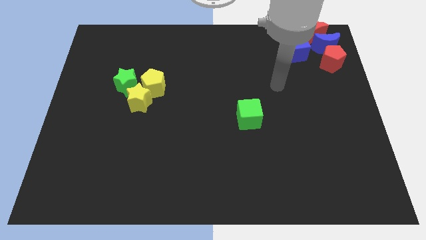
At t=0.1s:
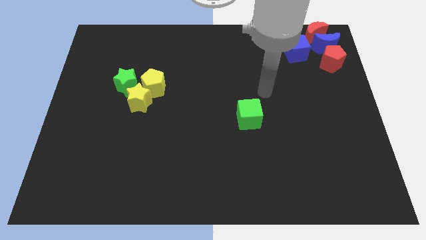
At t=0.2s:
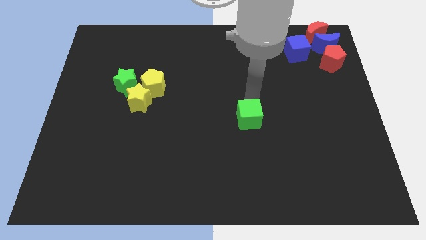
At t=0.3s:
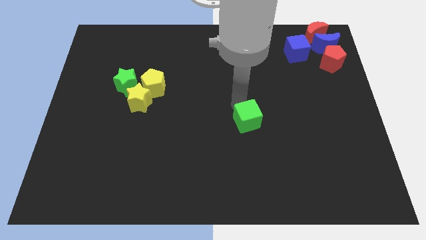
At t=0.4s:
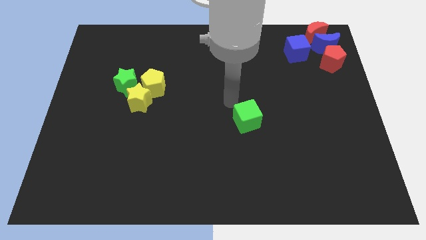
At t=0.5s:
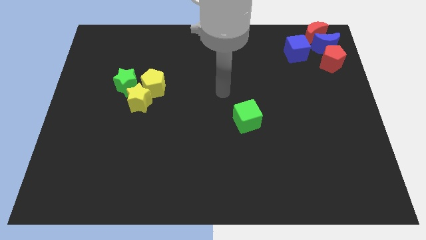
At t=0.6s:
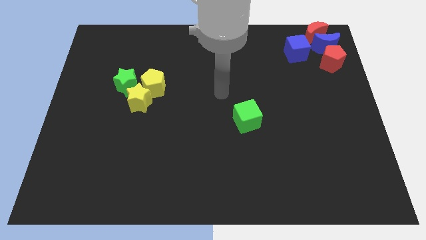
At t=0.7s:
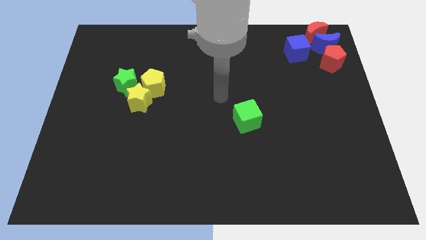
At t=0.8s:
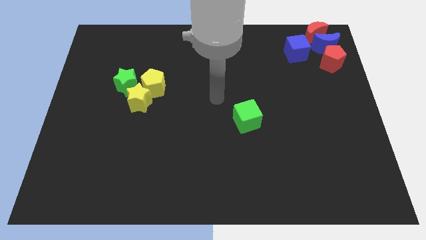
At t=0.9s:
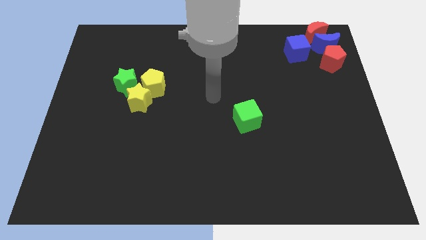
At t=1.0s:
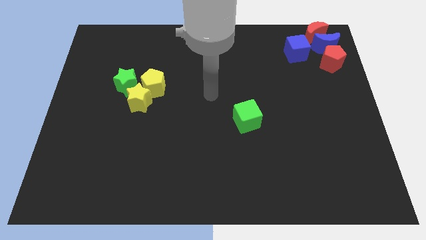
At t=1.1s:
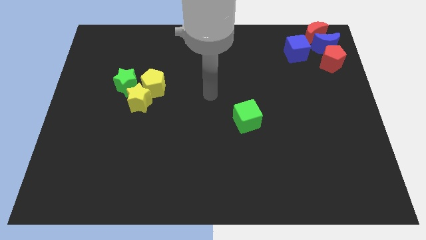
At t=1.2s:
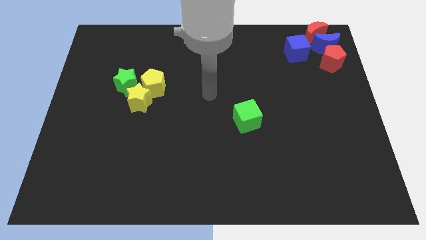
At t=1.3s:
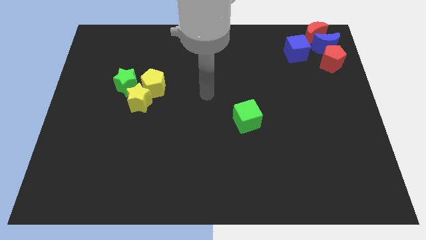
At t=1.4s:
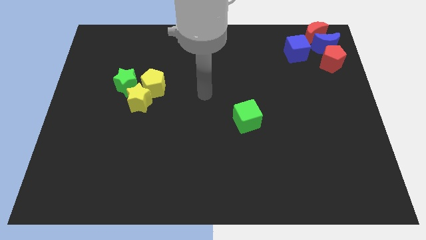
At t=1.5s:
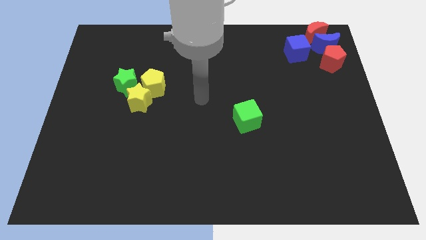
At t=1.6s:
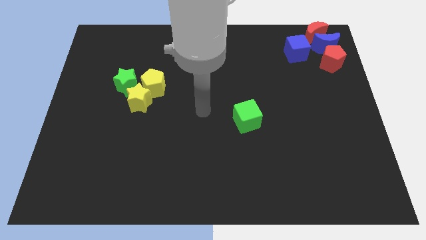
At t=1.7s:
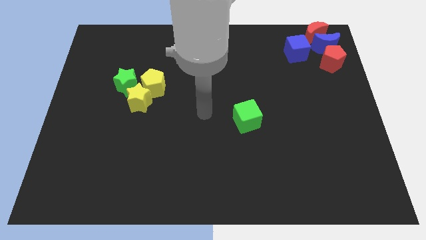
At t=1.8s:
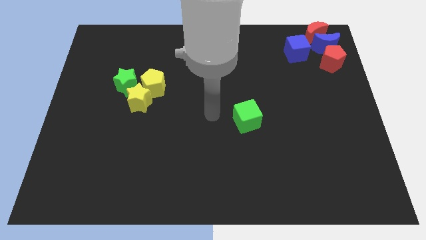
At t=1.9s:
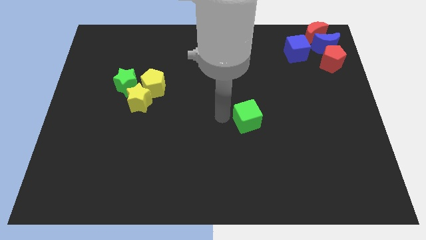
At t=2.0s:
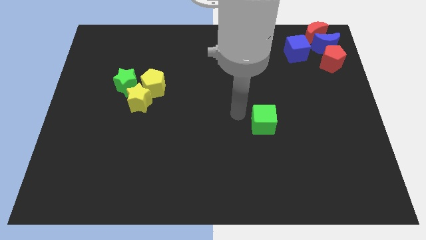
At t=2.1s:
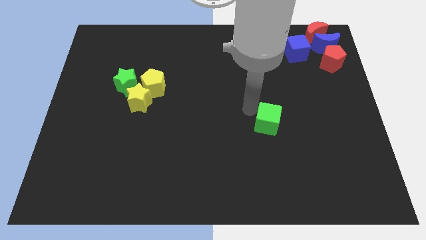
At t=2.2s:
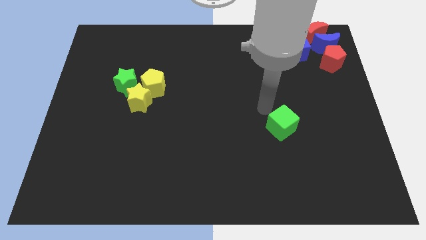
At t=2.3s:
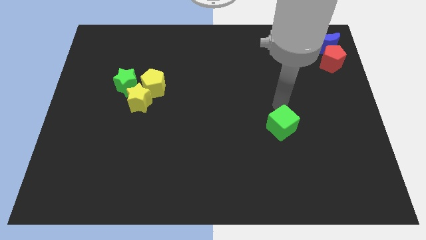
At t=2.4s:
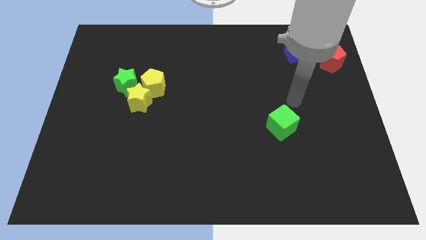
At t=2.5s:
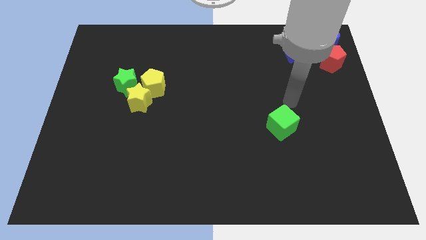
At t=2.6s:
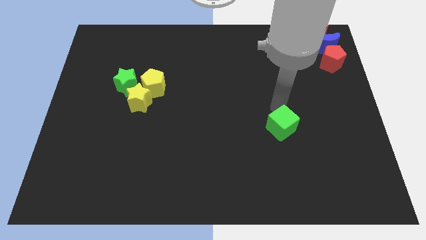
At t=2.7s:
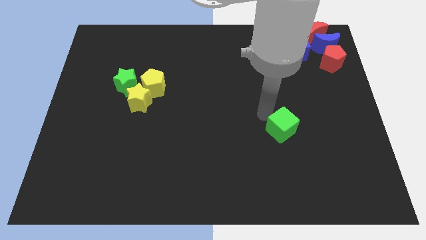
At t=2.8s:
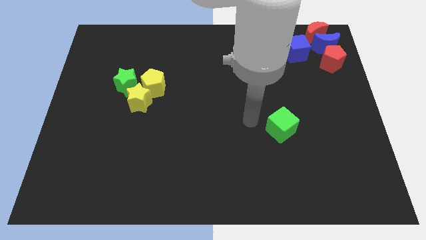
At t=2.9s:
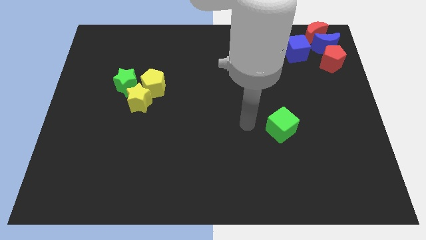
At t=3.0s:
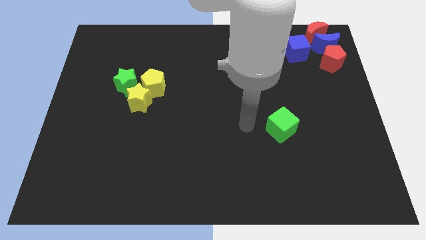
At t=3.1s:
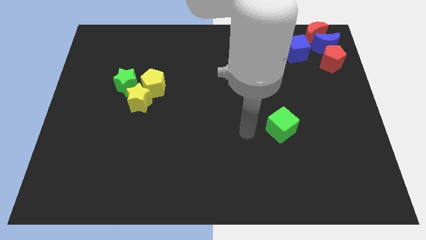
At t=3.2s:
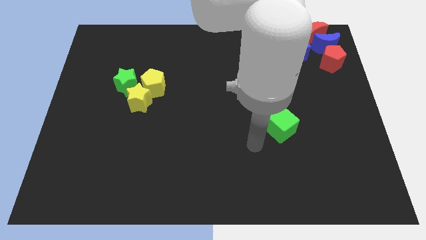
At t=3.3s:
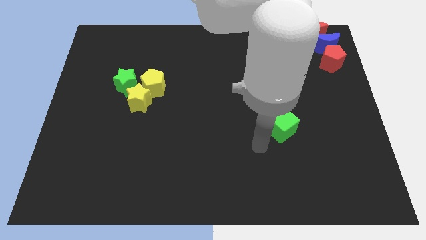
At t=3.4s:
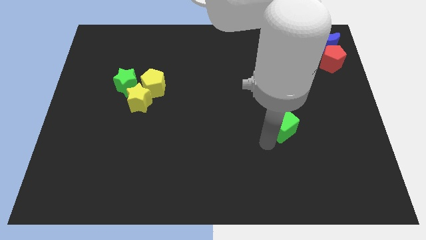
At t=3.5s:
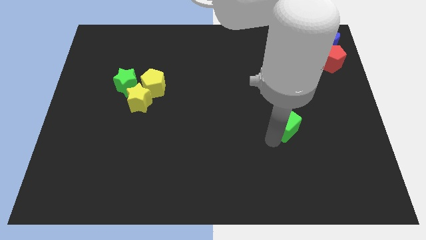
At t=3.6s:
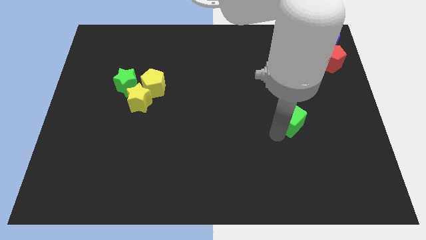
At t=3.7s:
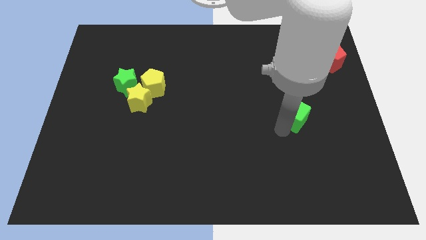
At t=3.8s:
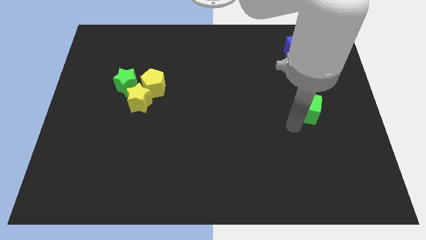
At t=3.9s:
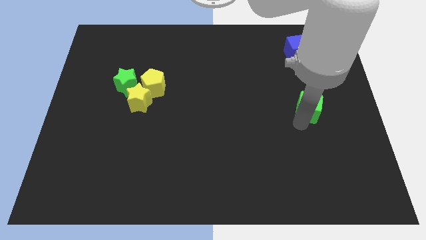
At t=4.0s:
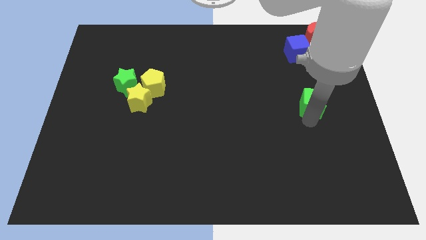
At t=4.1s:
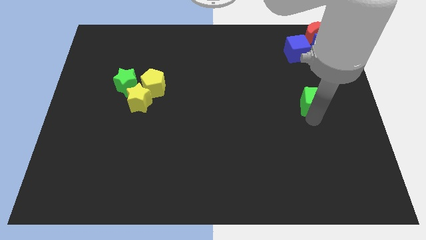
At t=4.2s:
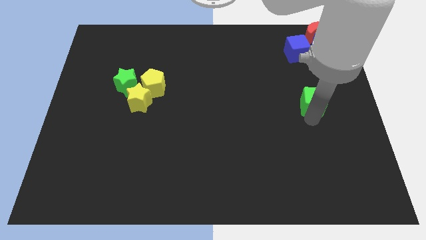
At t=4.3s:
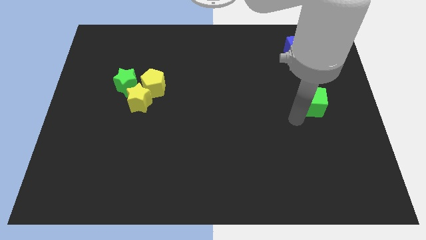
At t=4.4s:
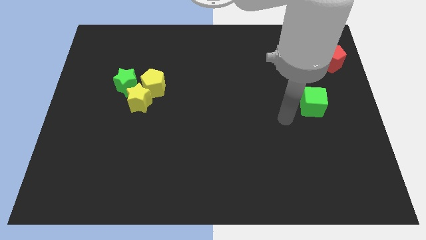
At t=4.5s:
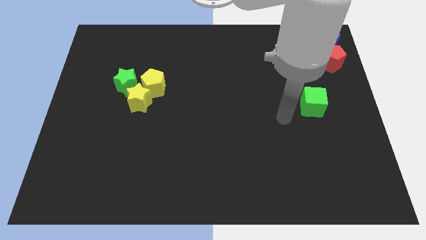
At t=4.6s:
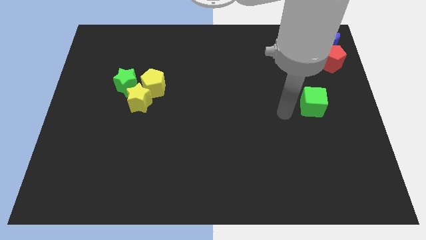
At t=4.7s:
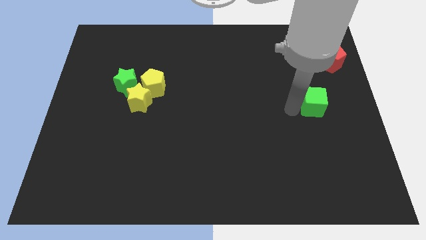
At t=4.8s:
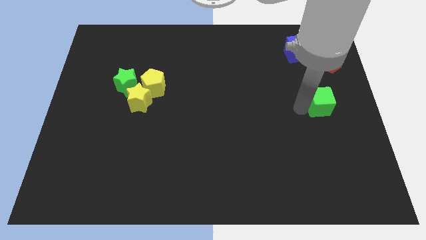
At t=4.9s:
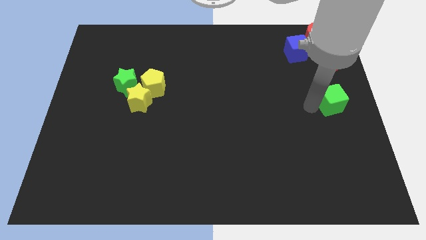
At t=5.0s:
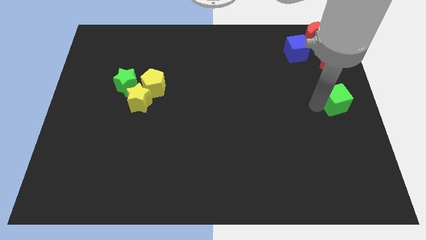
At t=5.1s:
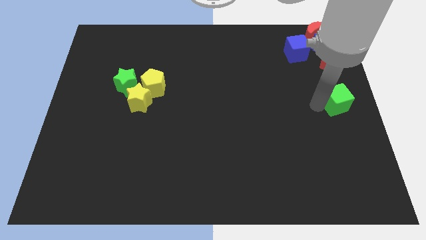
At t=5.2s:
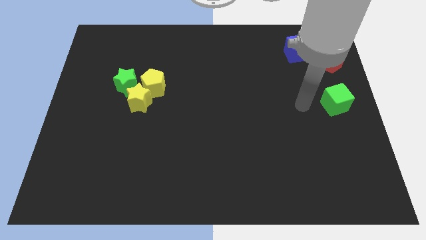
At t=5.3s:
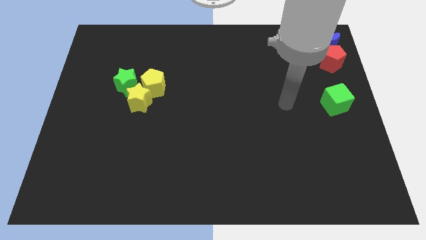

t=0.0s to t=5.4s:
move the green cube to the vertical bottom of the red pentagon

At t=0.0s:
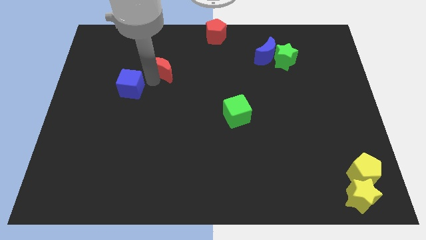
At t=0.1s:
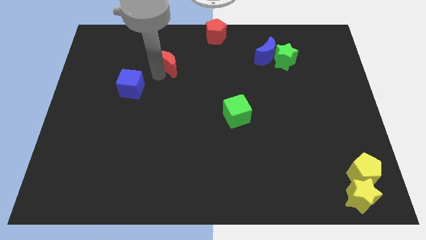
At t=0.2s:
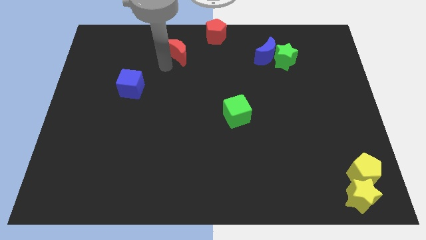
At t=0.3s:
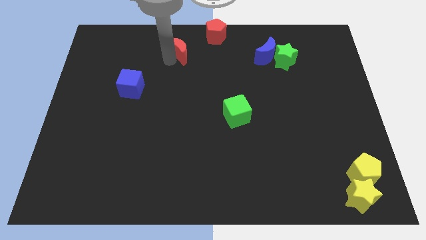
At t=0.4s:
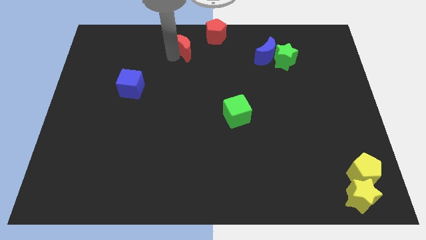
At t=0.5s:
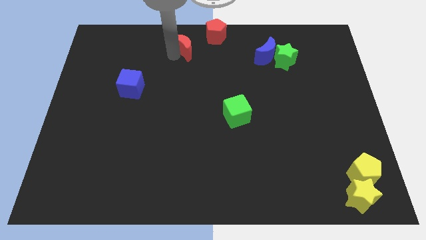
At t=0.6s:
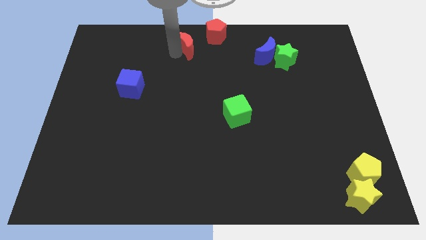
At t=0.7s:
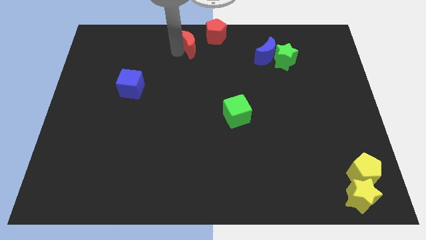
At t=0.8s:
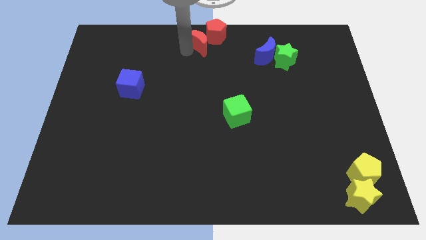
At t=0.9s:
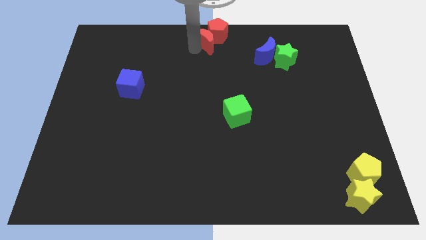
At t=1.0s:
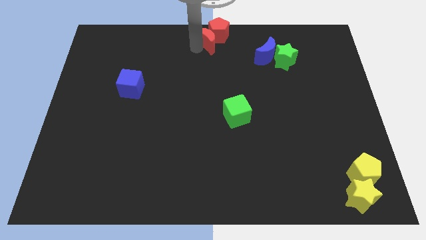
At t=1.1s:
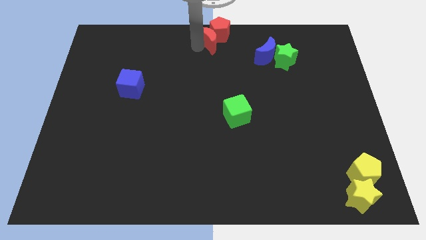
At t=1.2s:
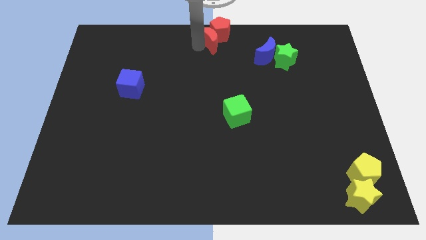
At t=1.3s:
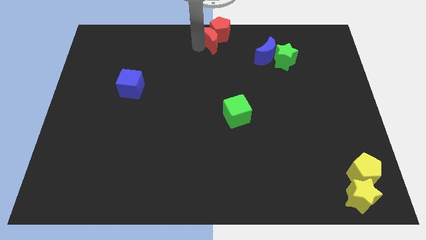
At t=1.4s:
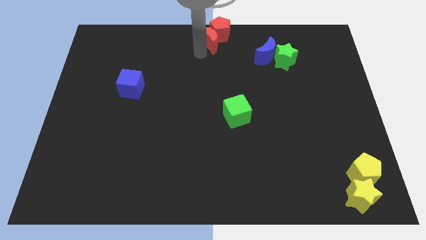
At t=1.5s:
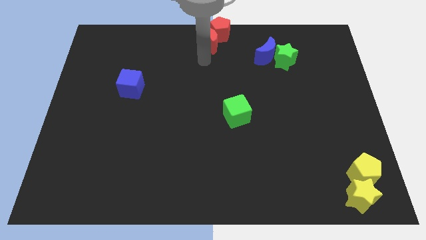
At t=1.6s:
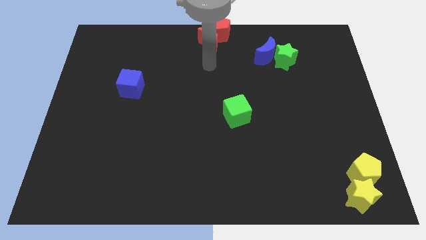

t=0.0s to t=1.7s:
push the red crescent into red pentagon

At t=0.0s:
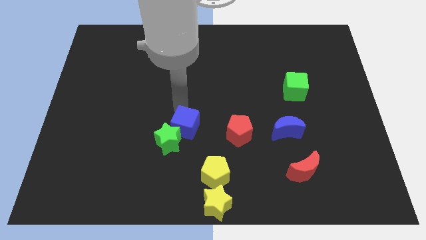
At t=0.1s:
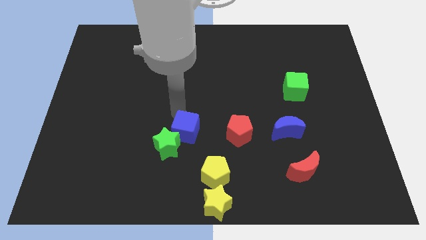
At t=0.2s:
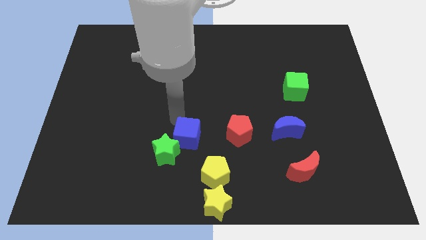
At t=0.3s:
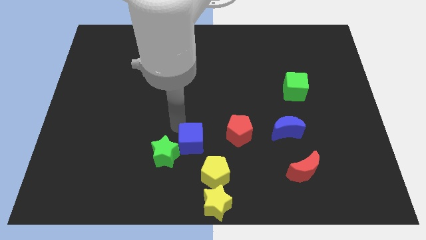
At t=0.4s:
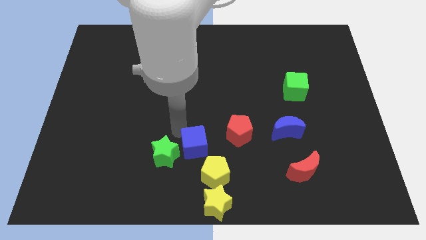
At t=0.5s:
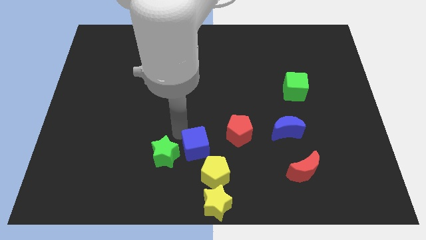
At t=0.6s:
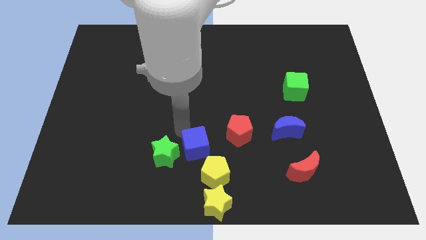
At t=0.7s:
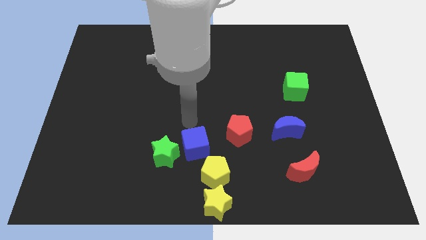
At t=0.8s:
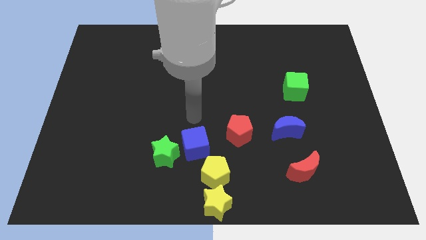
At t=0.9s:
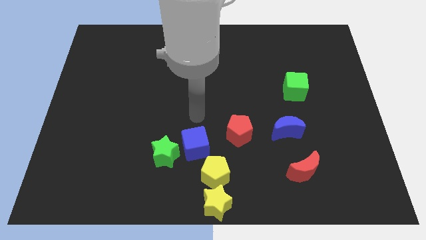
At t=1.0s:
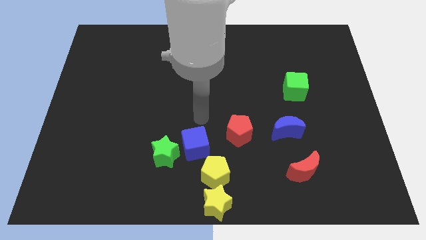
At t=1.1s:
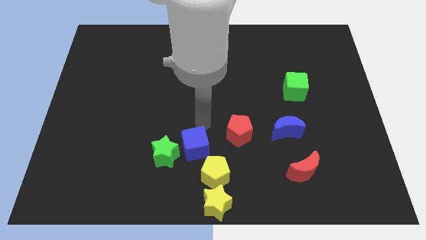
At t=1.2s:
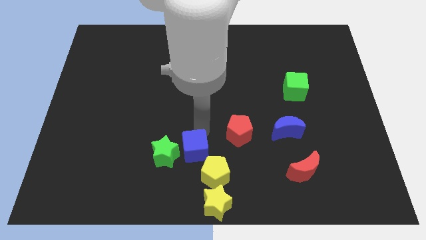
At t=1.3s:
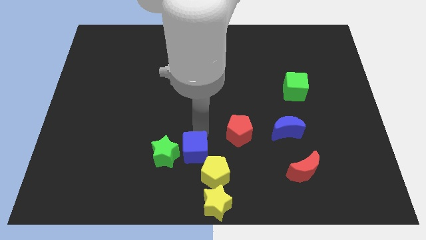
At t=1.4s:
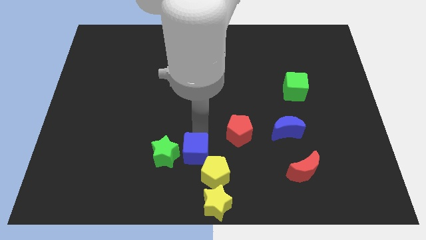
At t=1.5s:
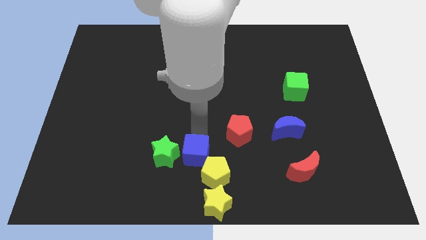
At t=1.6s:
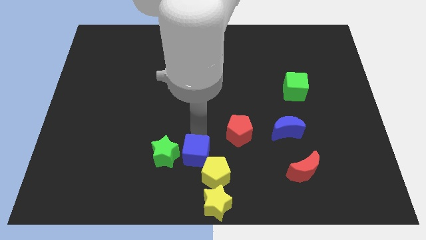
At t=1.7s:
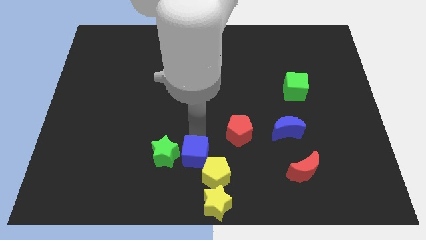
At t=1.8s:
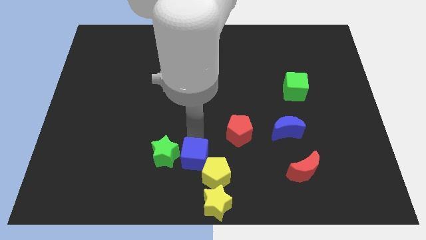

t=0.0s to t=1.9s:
push the blue cube right to the green star
